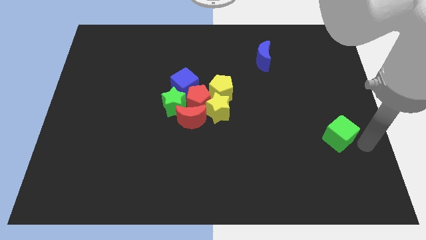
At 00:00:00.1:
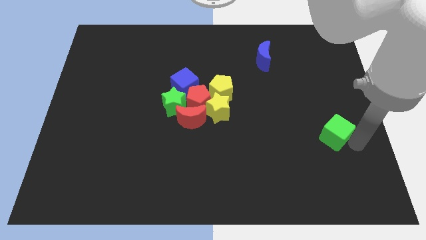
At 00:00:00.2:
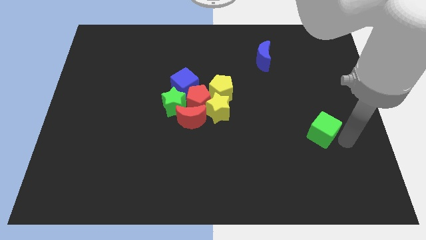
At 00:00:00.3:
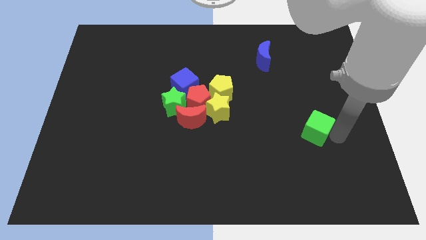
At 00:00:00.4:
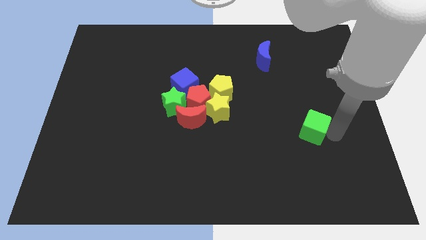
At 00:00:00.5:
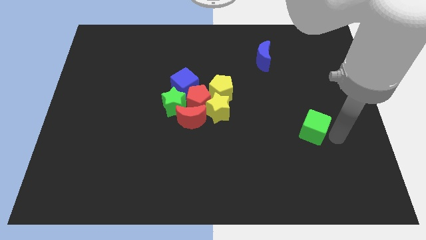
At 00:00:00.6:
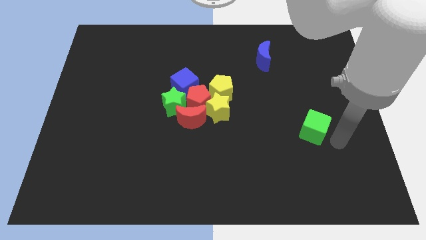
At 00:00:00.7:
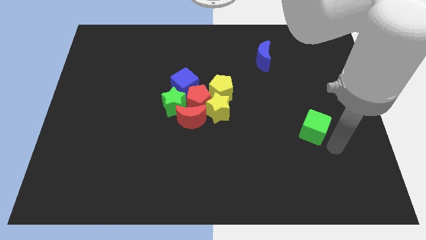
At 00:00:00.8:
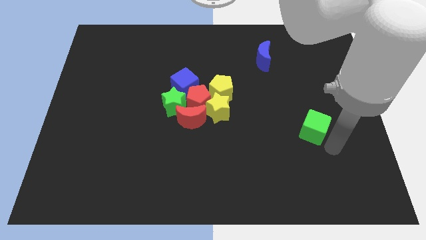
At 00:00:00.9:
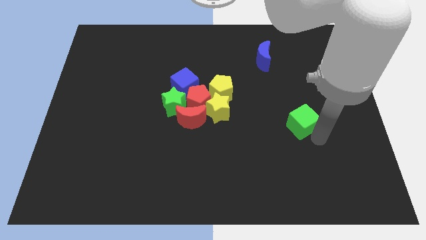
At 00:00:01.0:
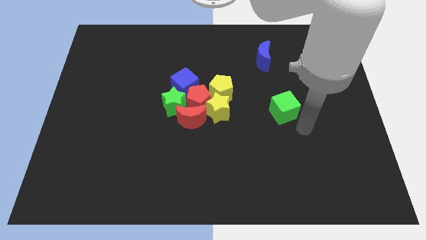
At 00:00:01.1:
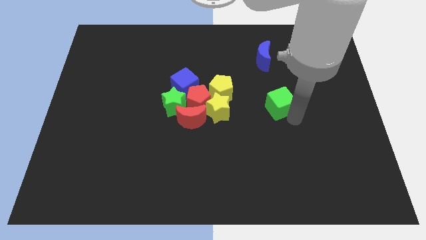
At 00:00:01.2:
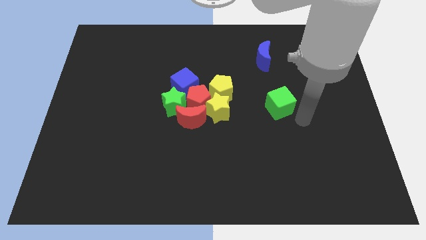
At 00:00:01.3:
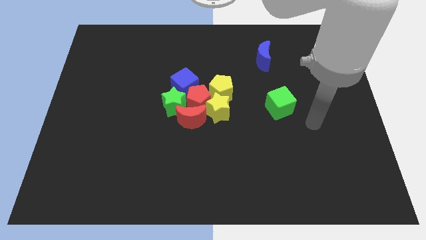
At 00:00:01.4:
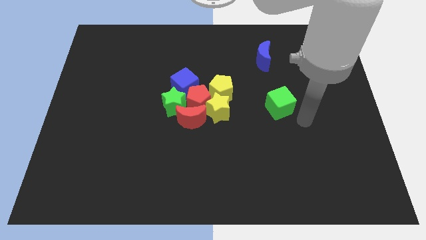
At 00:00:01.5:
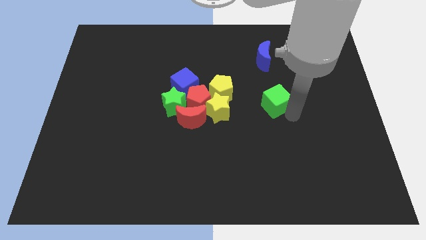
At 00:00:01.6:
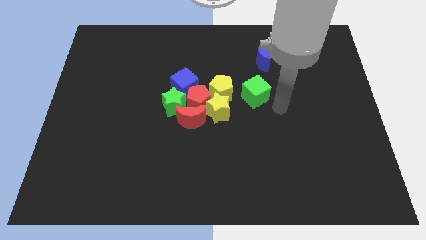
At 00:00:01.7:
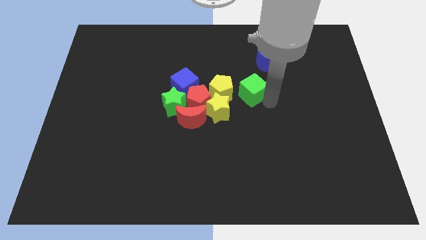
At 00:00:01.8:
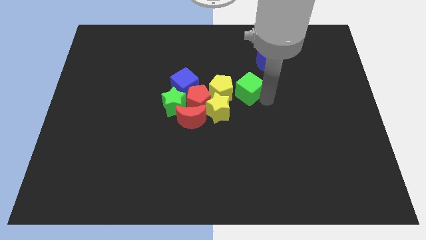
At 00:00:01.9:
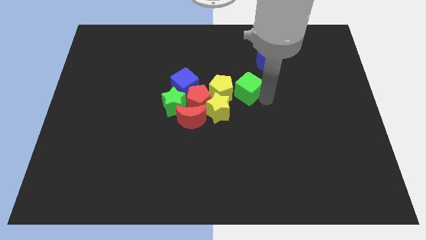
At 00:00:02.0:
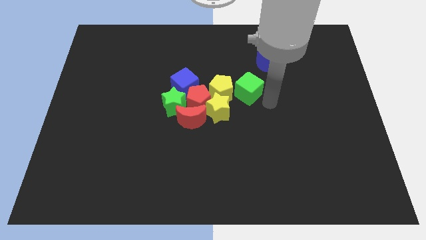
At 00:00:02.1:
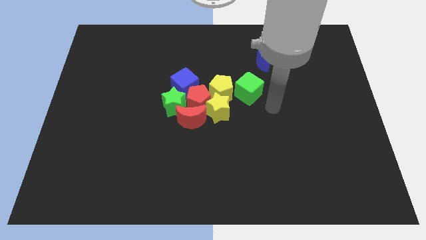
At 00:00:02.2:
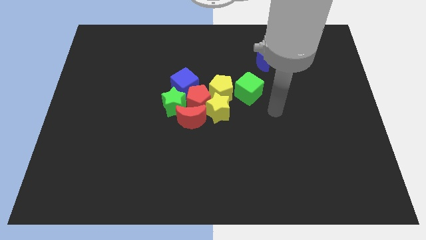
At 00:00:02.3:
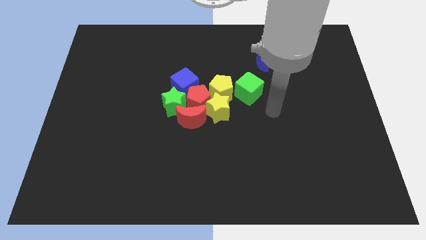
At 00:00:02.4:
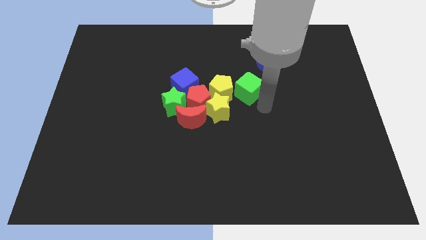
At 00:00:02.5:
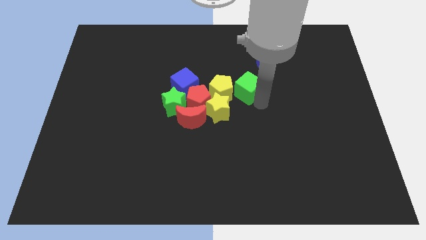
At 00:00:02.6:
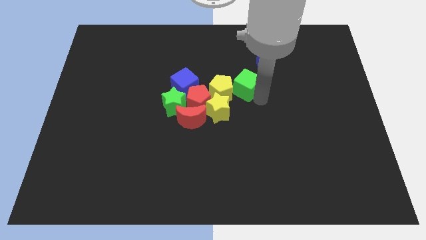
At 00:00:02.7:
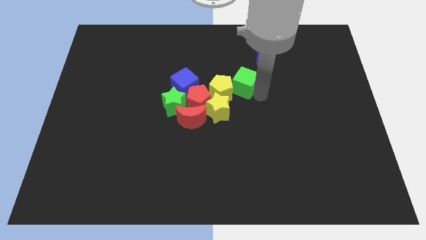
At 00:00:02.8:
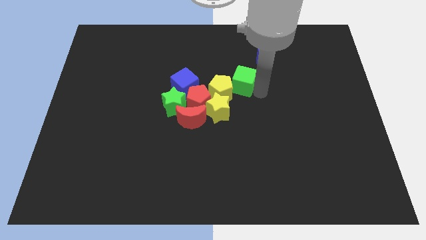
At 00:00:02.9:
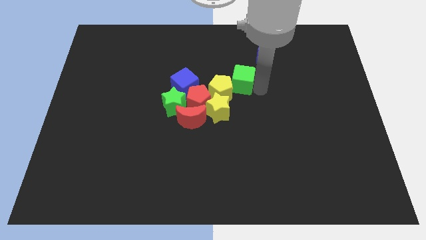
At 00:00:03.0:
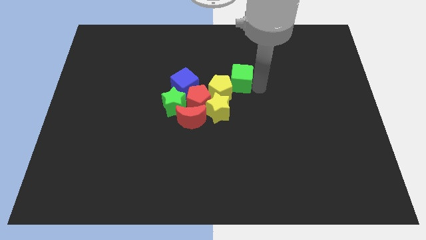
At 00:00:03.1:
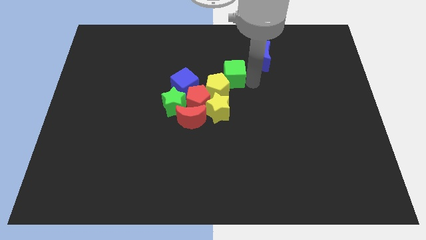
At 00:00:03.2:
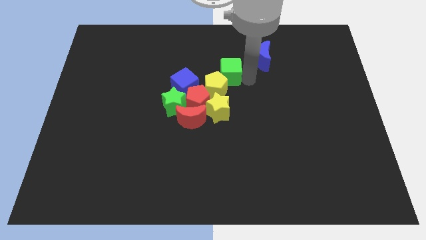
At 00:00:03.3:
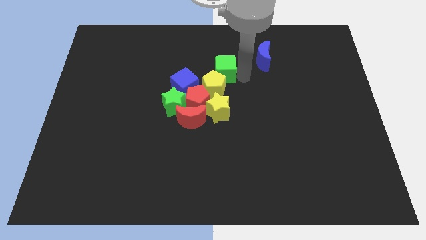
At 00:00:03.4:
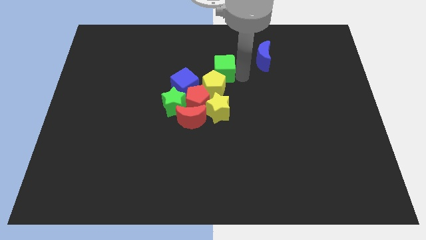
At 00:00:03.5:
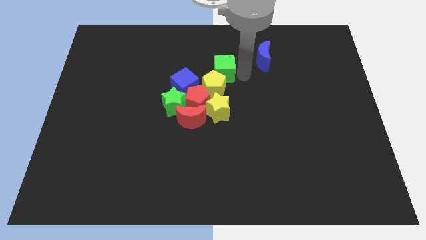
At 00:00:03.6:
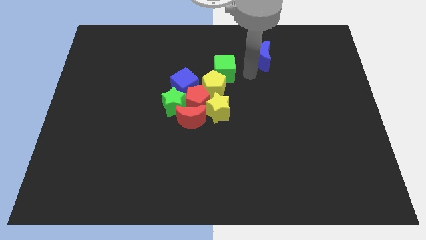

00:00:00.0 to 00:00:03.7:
slide the green cube to the top right side of the yellow pentagon

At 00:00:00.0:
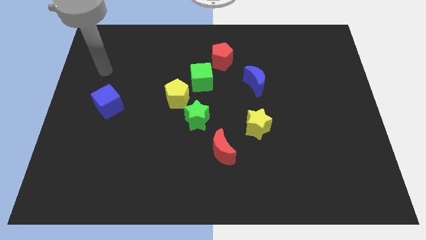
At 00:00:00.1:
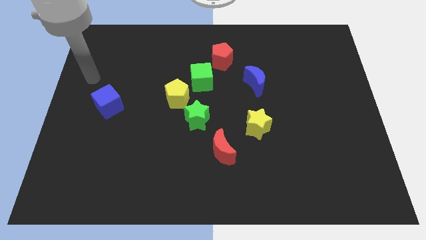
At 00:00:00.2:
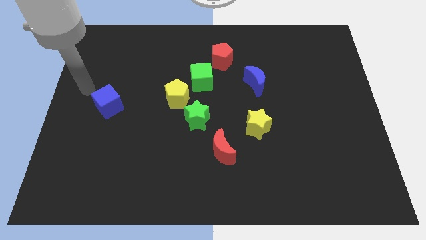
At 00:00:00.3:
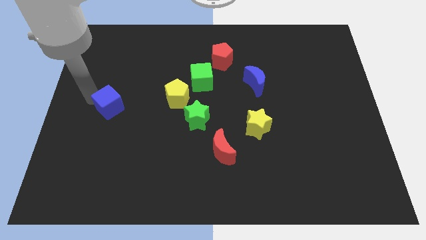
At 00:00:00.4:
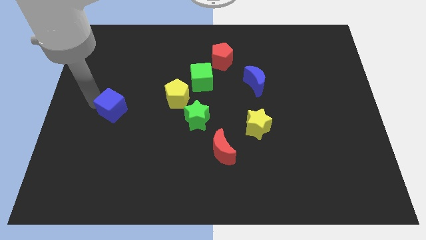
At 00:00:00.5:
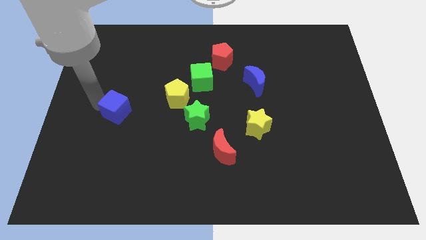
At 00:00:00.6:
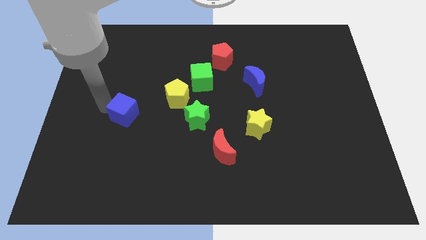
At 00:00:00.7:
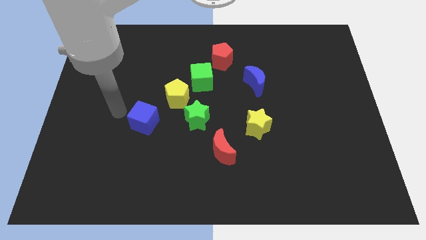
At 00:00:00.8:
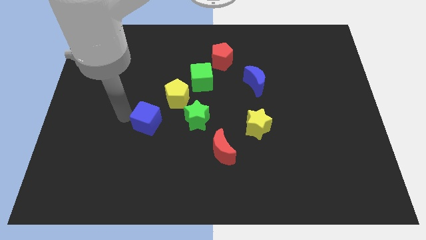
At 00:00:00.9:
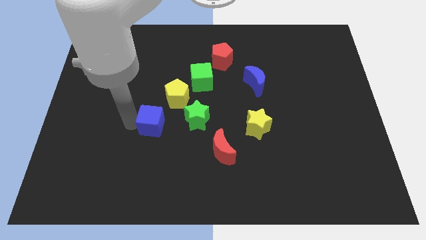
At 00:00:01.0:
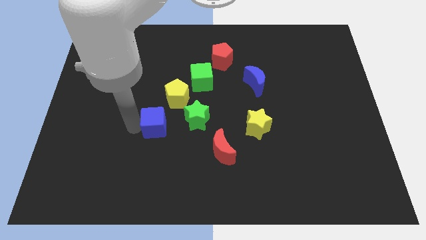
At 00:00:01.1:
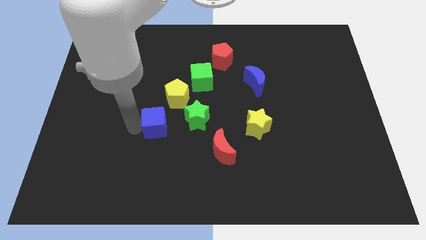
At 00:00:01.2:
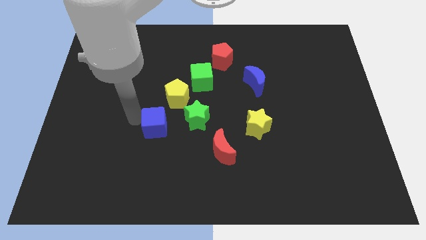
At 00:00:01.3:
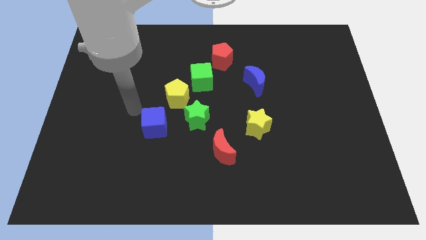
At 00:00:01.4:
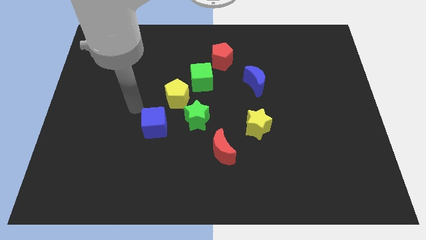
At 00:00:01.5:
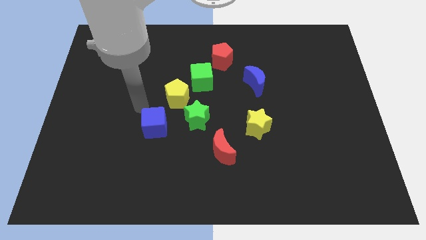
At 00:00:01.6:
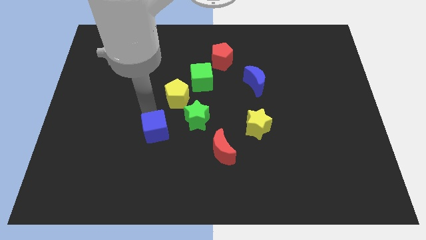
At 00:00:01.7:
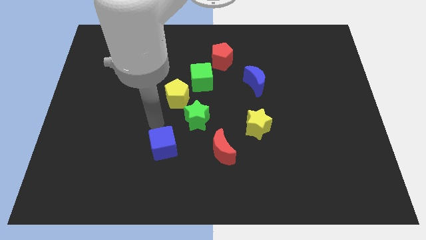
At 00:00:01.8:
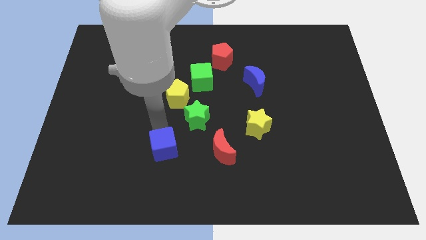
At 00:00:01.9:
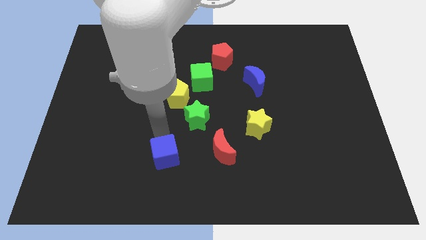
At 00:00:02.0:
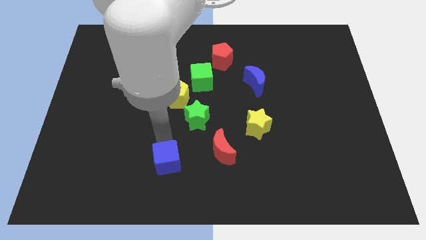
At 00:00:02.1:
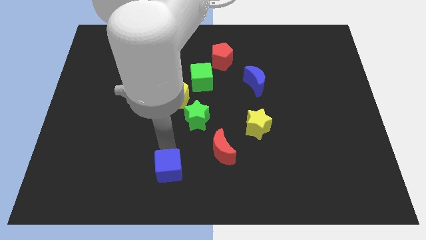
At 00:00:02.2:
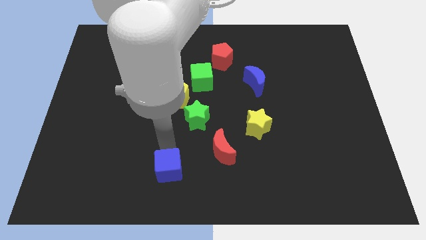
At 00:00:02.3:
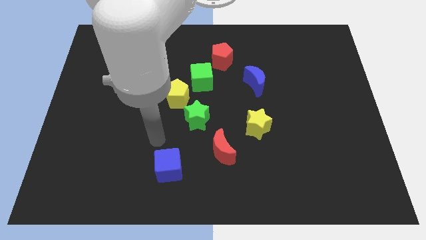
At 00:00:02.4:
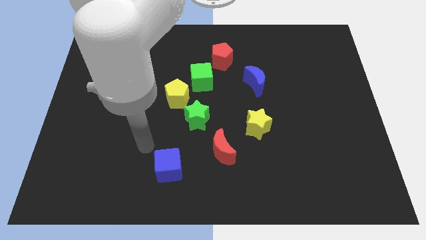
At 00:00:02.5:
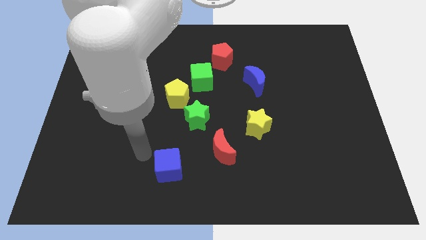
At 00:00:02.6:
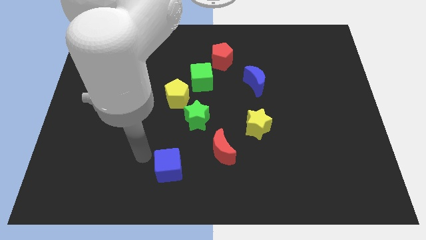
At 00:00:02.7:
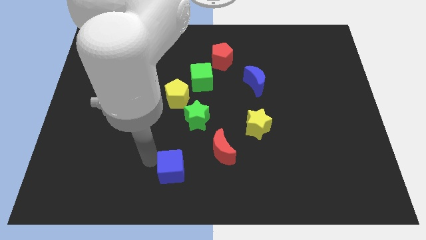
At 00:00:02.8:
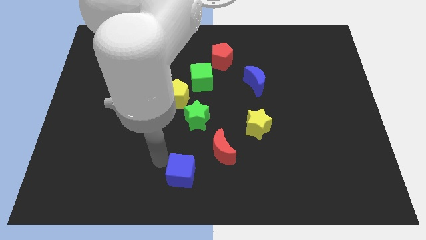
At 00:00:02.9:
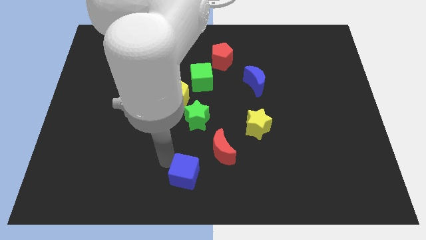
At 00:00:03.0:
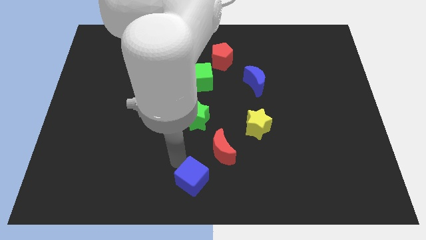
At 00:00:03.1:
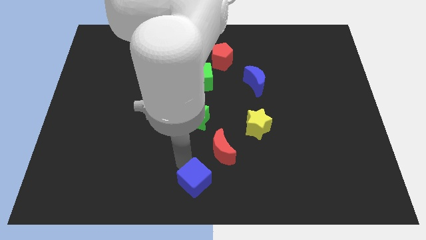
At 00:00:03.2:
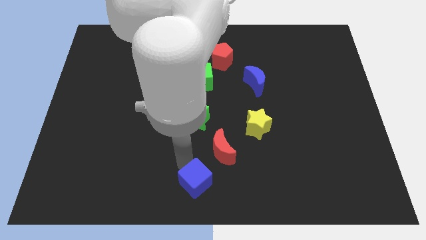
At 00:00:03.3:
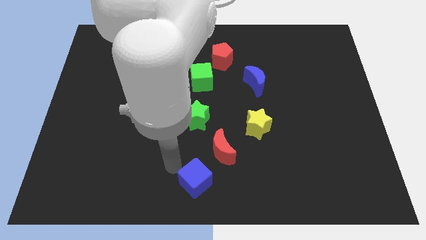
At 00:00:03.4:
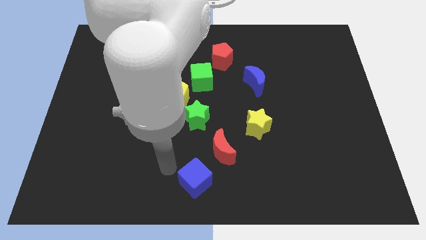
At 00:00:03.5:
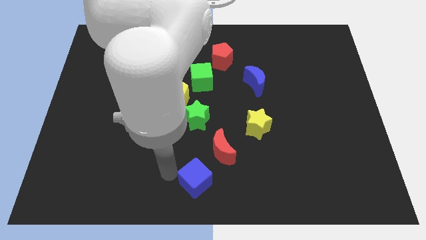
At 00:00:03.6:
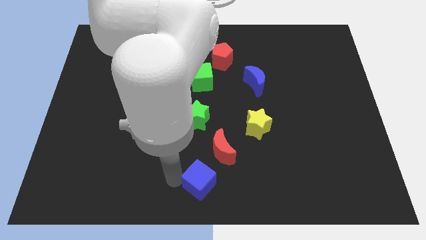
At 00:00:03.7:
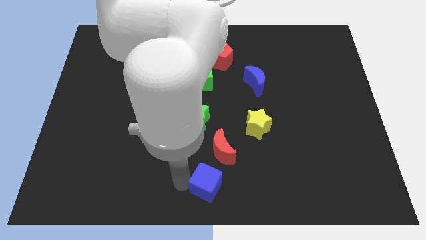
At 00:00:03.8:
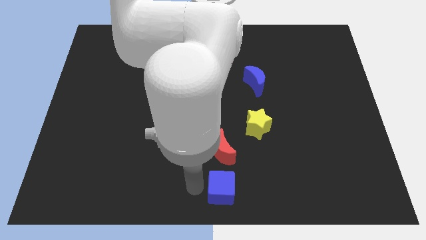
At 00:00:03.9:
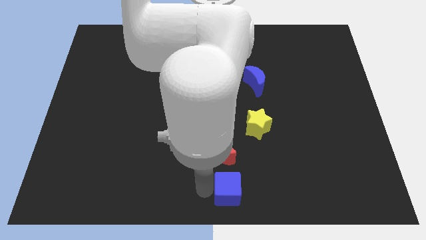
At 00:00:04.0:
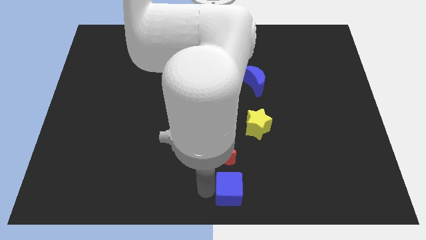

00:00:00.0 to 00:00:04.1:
place blue cube at the bottom center

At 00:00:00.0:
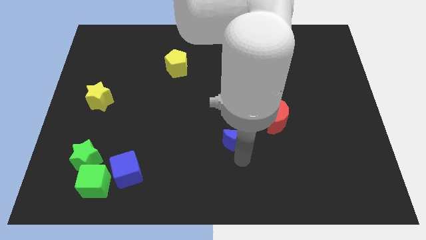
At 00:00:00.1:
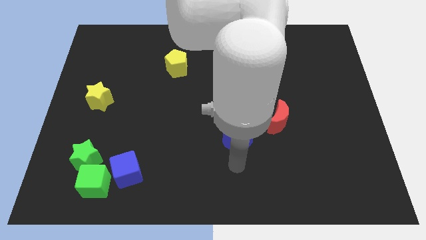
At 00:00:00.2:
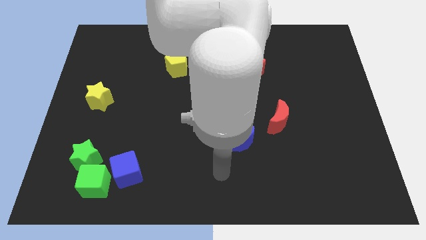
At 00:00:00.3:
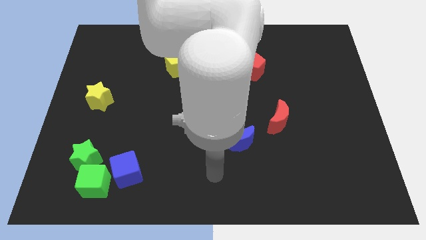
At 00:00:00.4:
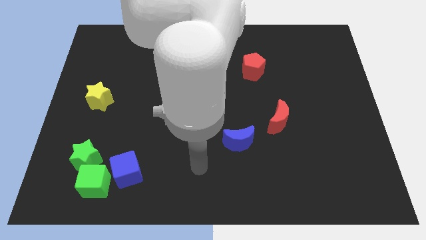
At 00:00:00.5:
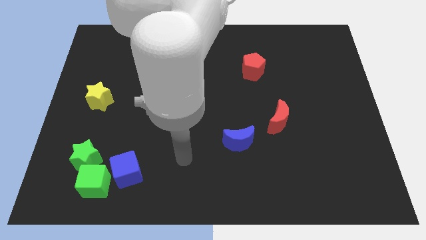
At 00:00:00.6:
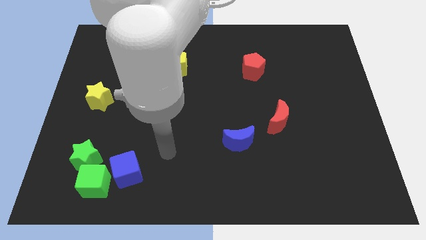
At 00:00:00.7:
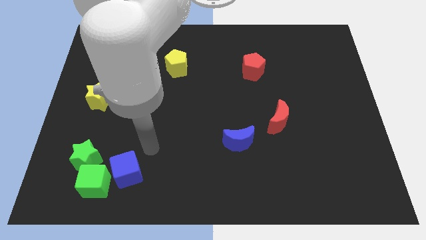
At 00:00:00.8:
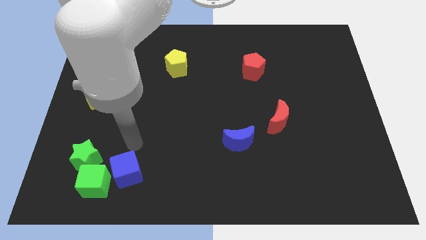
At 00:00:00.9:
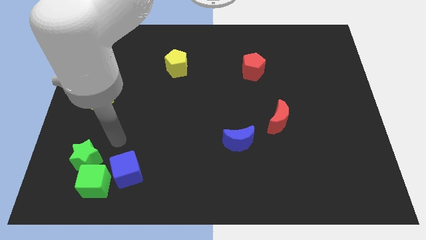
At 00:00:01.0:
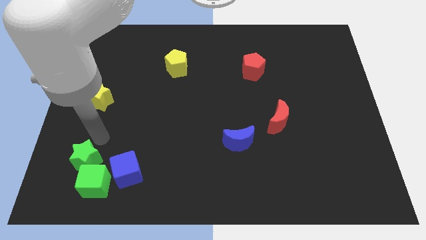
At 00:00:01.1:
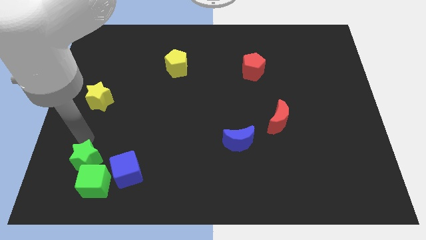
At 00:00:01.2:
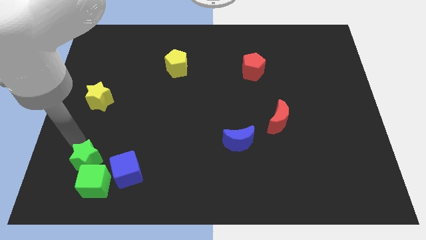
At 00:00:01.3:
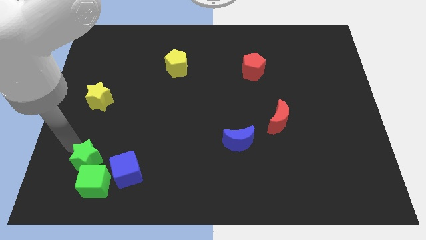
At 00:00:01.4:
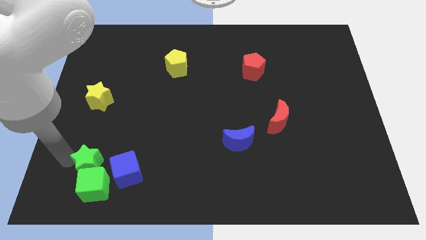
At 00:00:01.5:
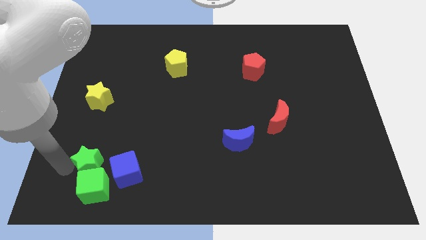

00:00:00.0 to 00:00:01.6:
place your arm parallel left to the green star
